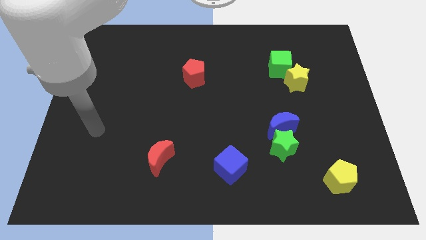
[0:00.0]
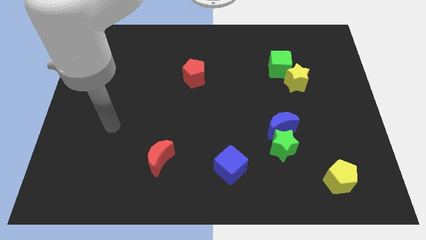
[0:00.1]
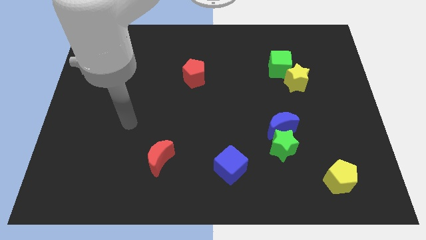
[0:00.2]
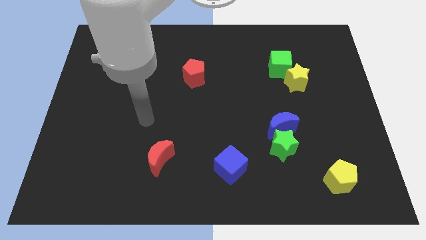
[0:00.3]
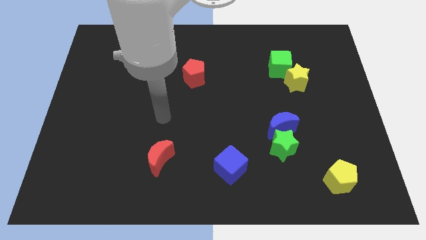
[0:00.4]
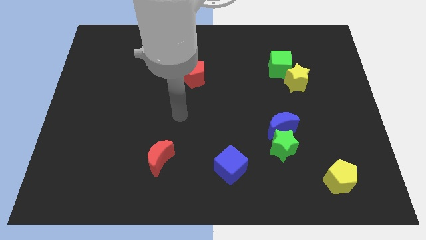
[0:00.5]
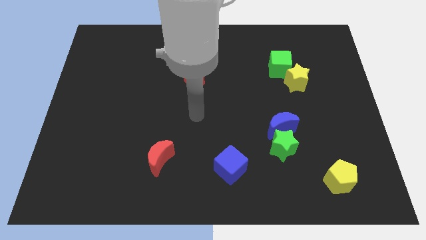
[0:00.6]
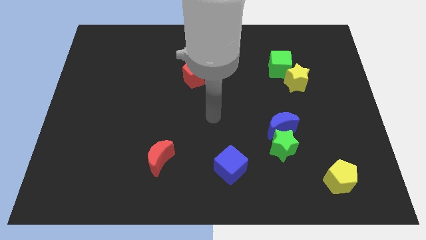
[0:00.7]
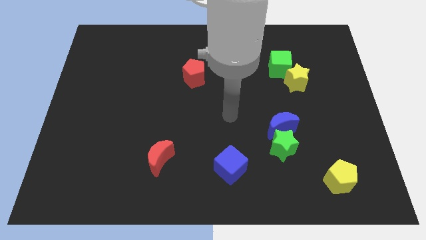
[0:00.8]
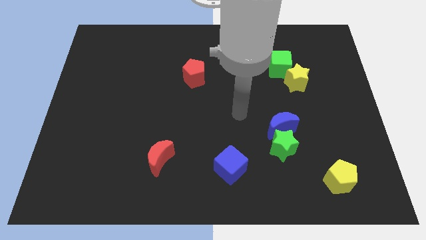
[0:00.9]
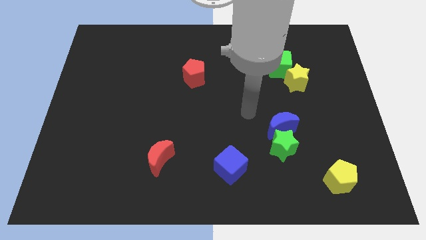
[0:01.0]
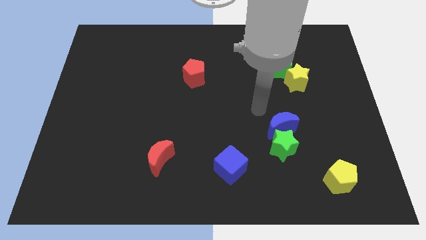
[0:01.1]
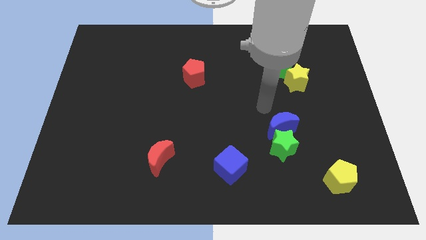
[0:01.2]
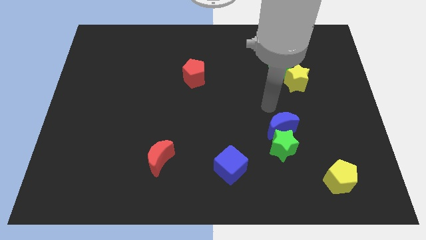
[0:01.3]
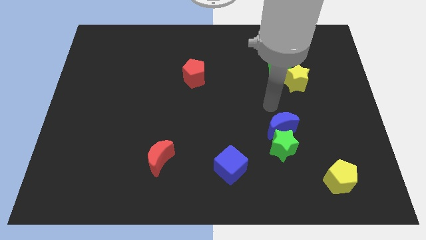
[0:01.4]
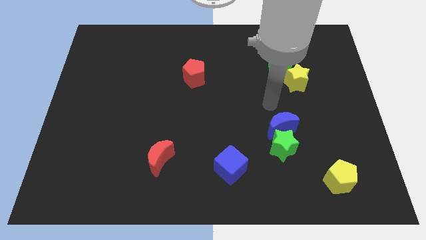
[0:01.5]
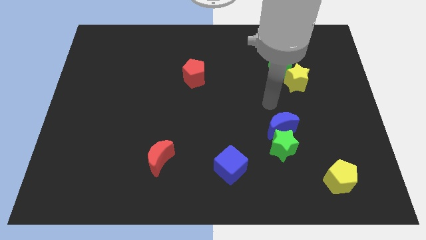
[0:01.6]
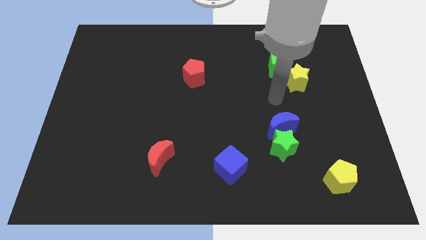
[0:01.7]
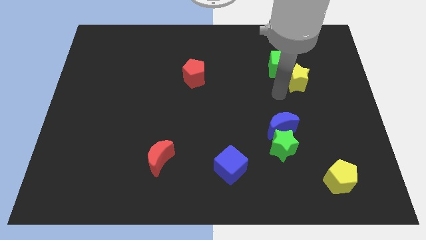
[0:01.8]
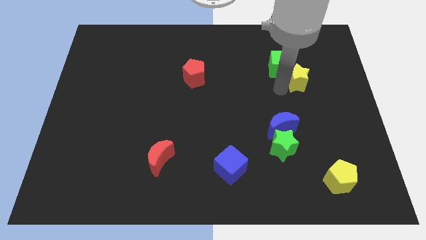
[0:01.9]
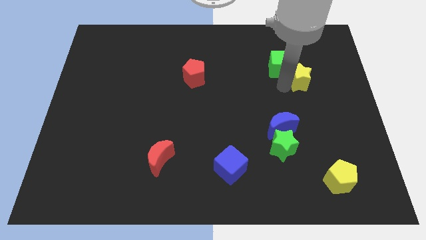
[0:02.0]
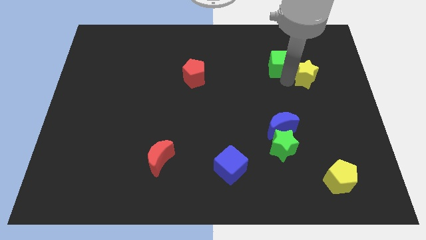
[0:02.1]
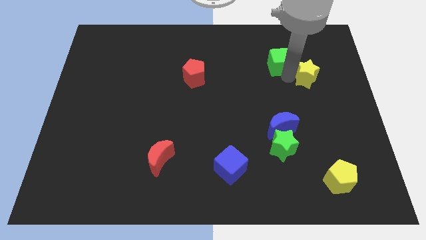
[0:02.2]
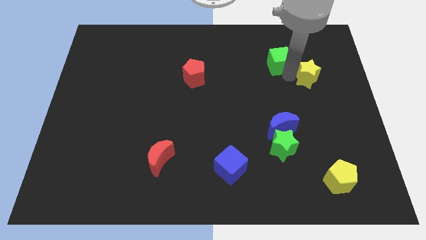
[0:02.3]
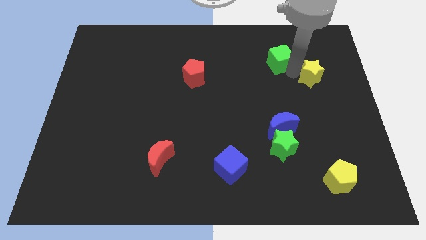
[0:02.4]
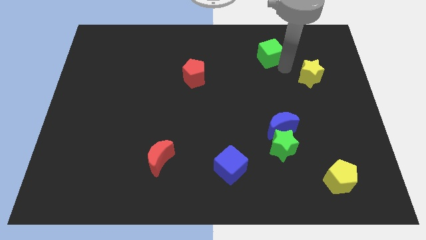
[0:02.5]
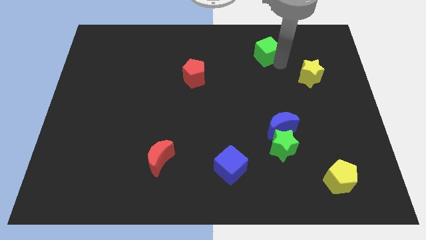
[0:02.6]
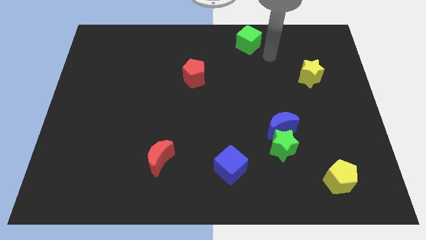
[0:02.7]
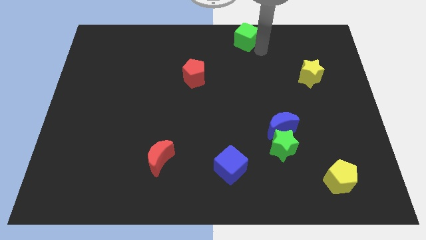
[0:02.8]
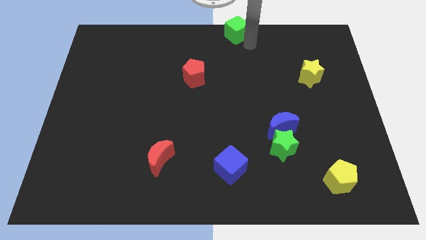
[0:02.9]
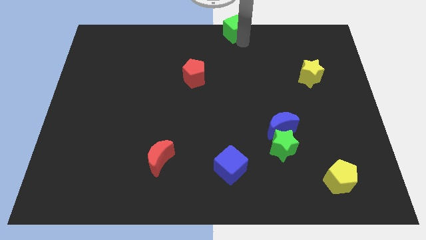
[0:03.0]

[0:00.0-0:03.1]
place the green cube at the center top

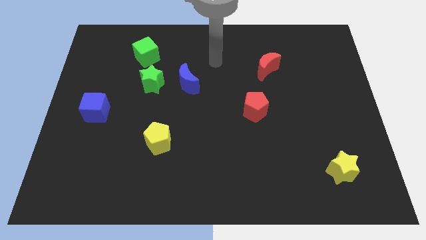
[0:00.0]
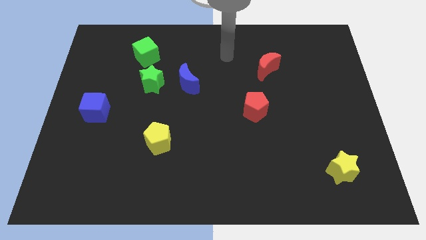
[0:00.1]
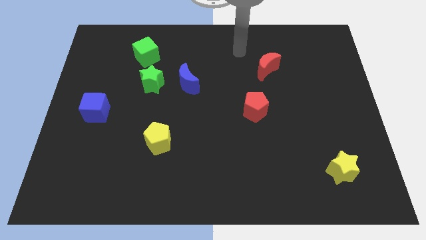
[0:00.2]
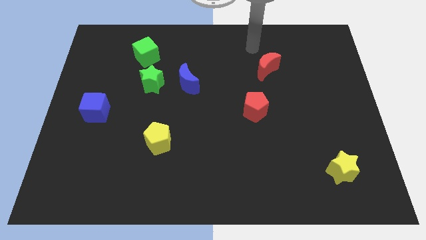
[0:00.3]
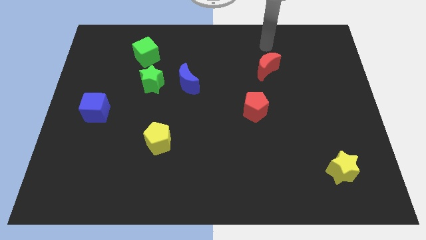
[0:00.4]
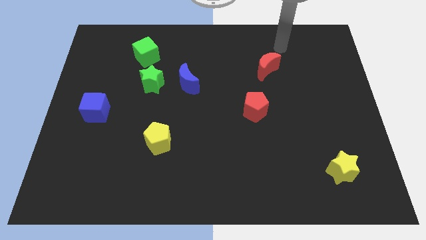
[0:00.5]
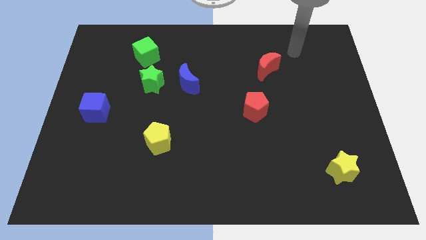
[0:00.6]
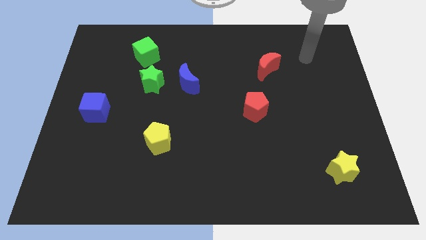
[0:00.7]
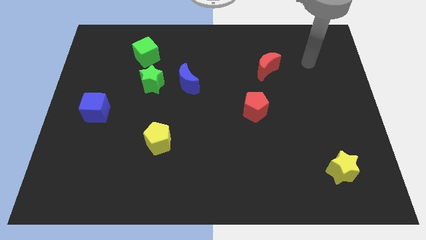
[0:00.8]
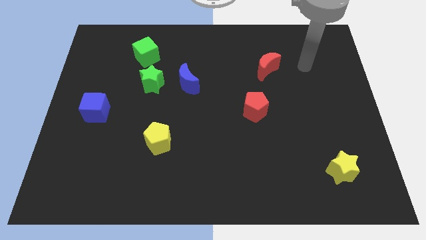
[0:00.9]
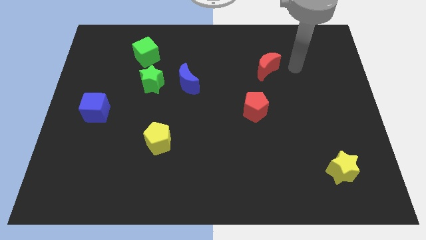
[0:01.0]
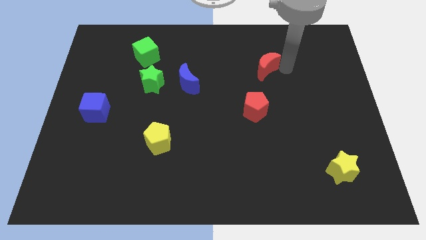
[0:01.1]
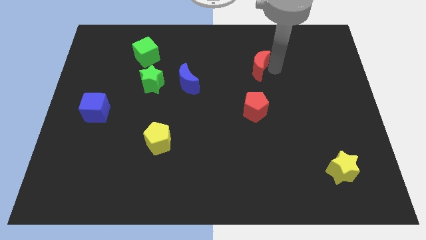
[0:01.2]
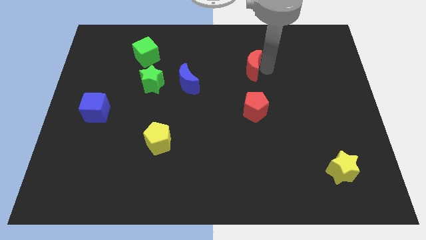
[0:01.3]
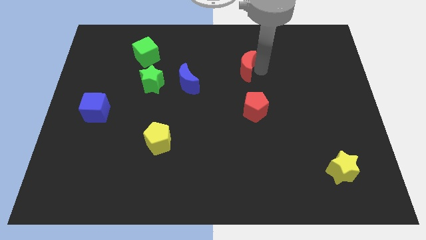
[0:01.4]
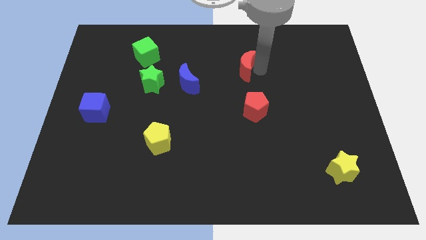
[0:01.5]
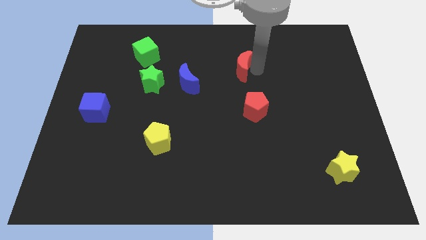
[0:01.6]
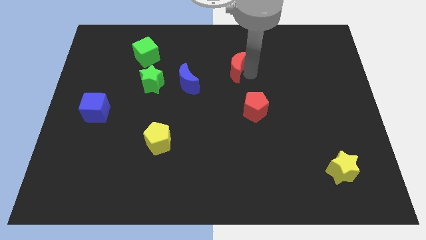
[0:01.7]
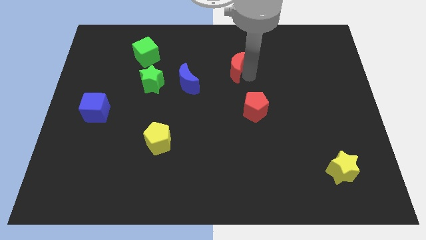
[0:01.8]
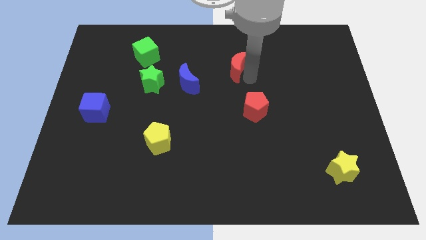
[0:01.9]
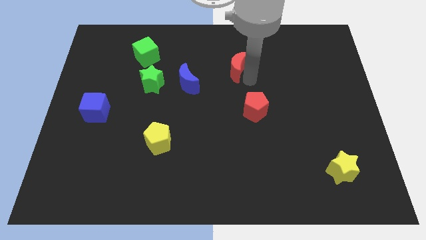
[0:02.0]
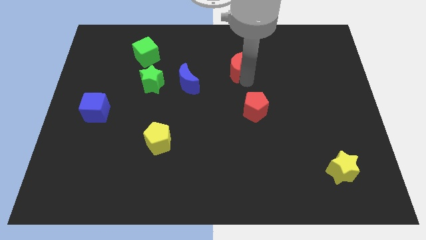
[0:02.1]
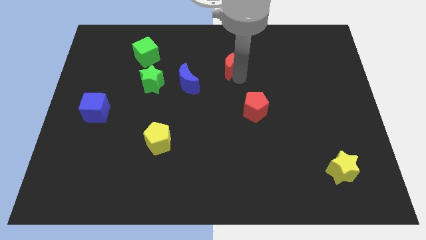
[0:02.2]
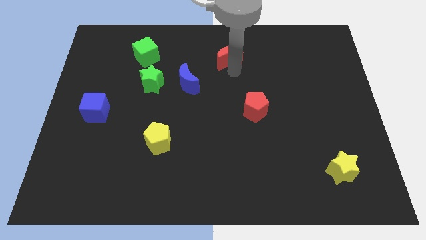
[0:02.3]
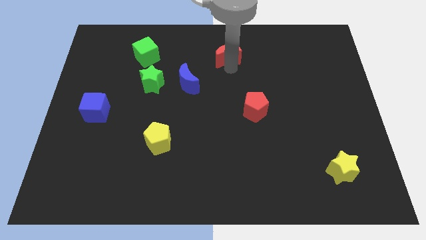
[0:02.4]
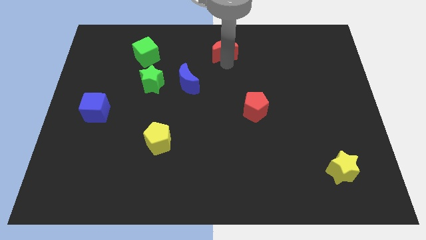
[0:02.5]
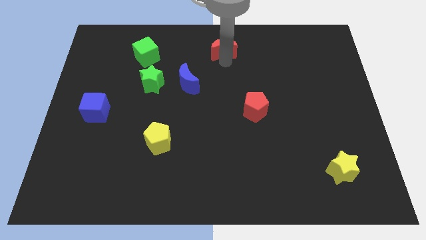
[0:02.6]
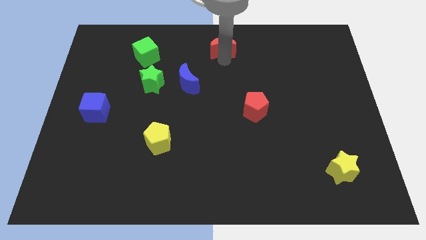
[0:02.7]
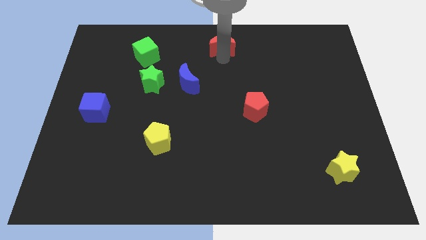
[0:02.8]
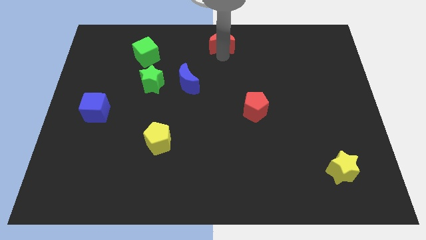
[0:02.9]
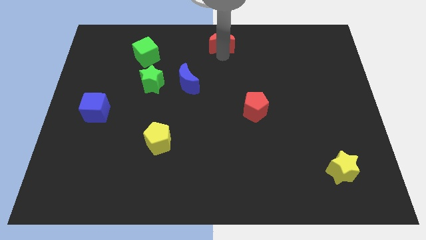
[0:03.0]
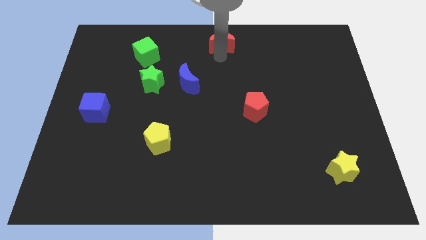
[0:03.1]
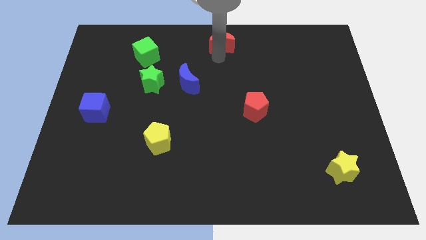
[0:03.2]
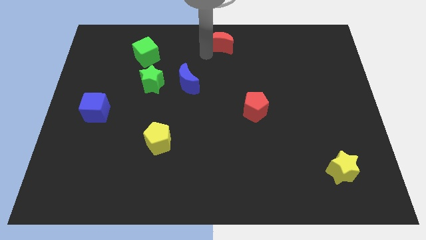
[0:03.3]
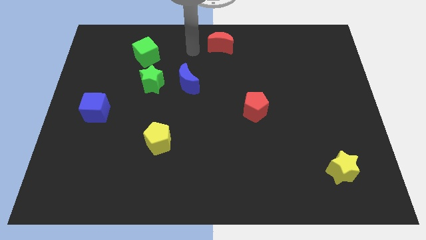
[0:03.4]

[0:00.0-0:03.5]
push the red crescent to the top center of the board

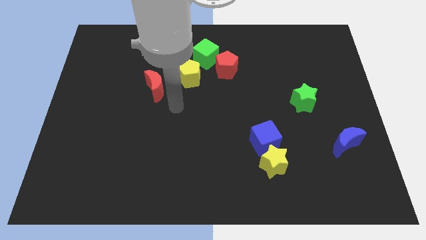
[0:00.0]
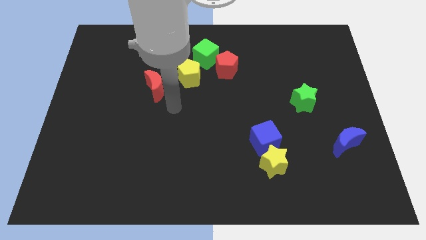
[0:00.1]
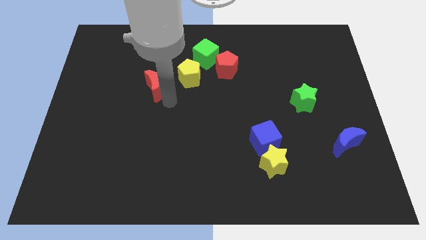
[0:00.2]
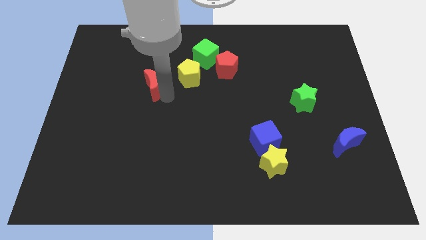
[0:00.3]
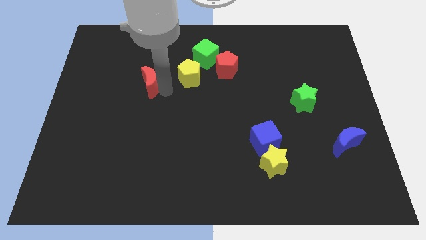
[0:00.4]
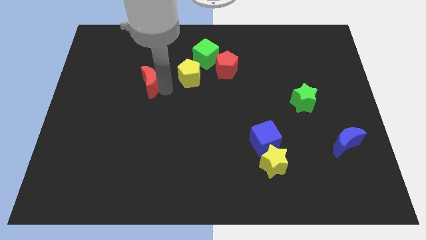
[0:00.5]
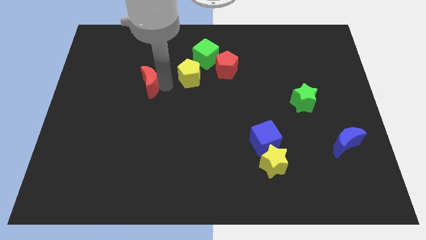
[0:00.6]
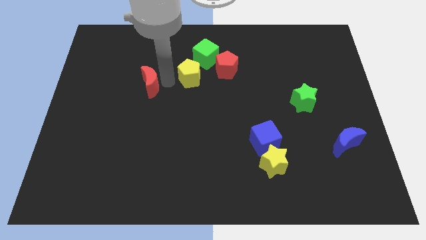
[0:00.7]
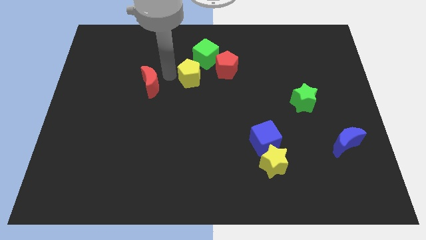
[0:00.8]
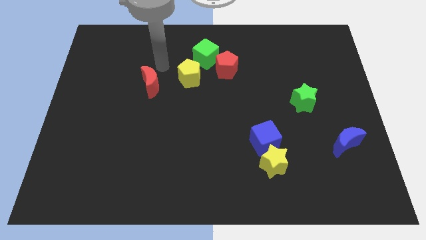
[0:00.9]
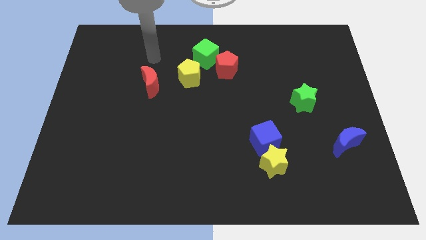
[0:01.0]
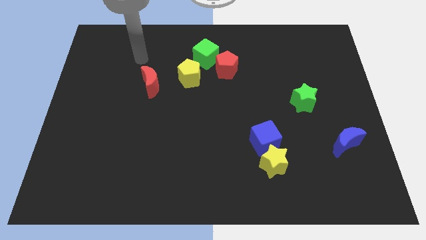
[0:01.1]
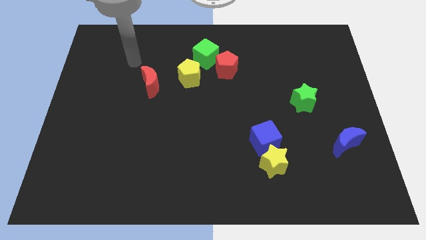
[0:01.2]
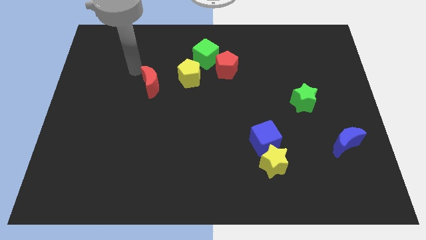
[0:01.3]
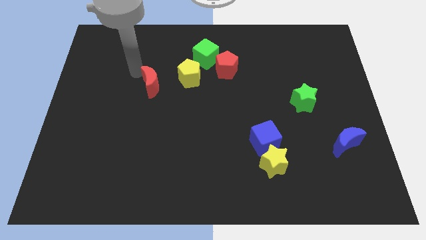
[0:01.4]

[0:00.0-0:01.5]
slightly touch right to the red moon

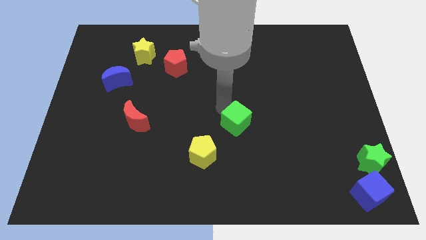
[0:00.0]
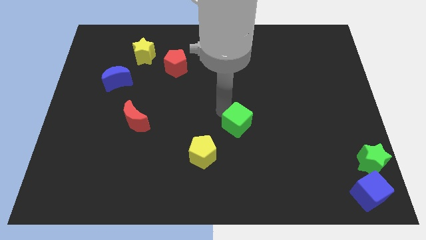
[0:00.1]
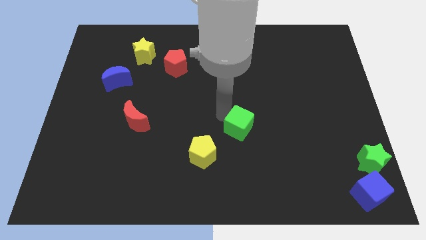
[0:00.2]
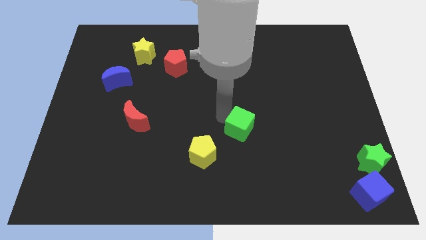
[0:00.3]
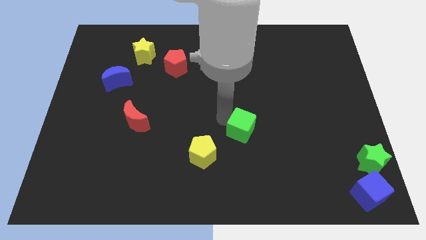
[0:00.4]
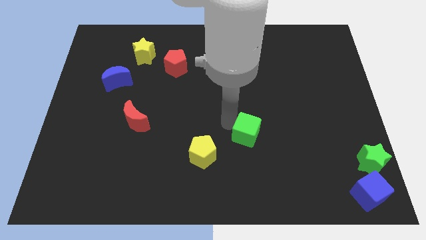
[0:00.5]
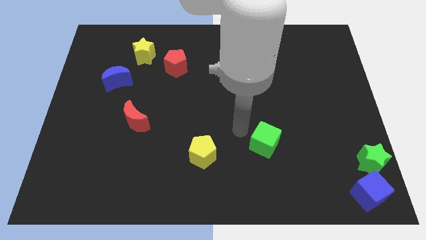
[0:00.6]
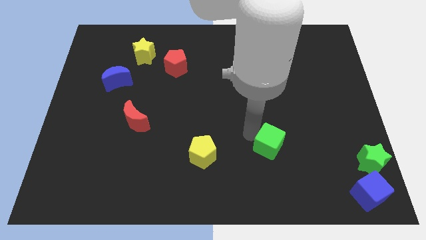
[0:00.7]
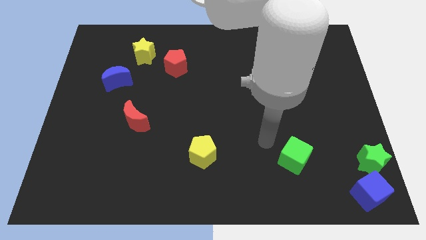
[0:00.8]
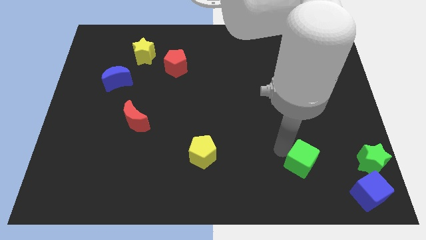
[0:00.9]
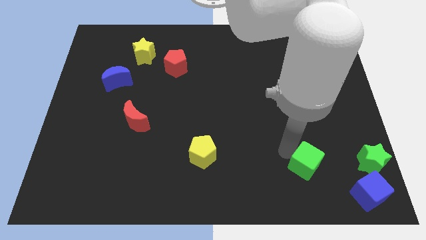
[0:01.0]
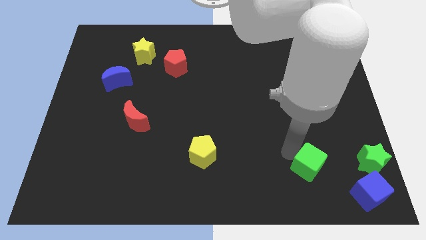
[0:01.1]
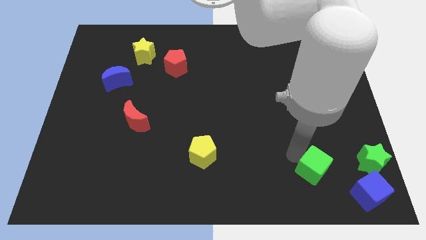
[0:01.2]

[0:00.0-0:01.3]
move the green cube to the left of the green star
